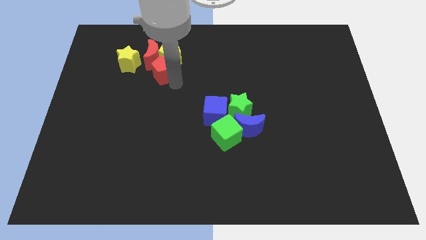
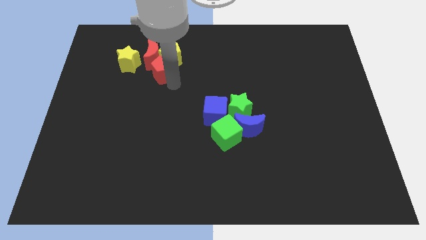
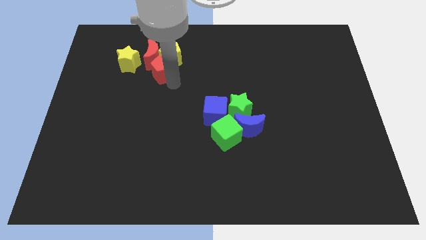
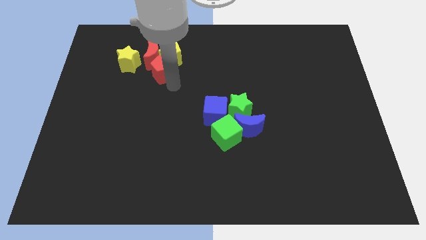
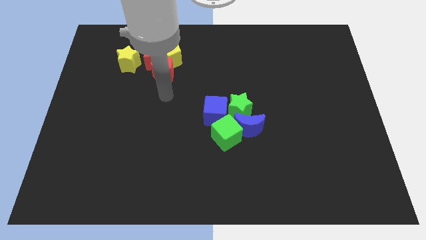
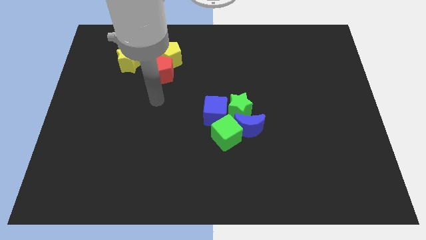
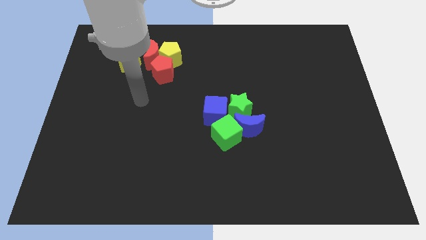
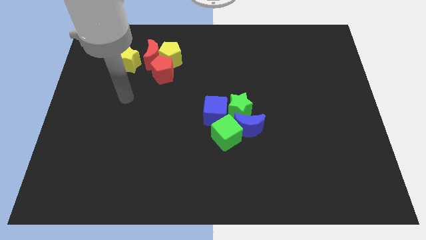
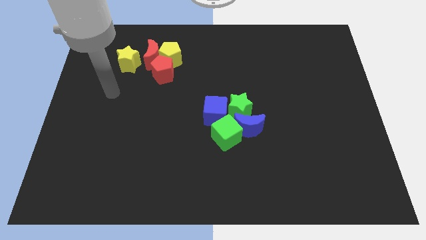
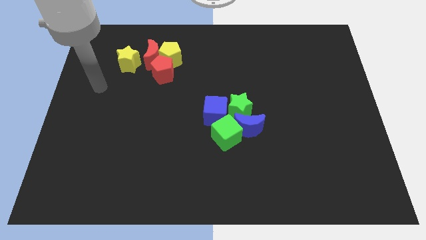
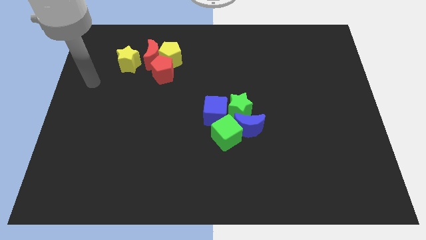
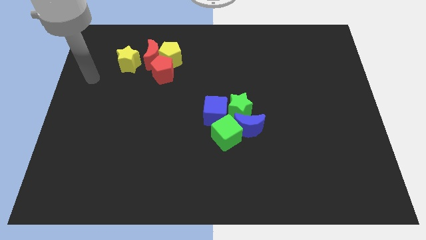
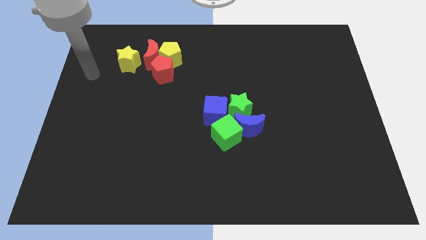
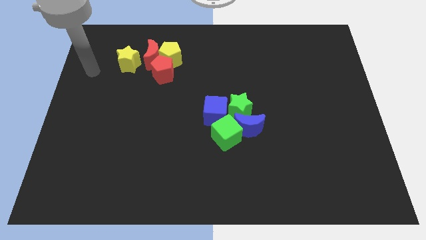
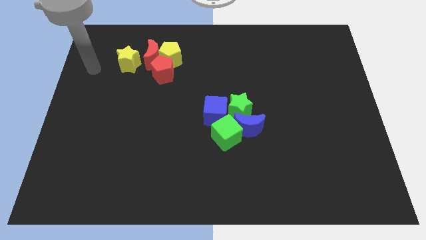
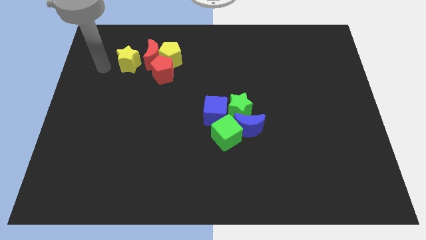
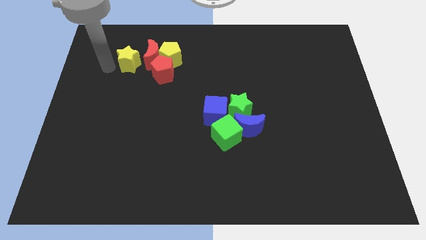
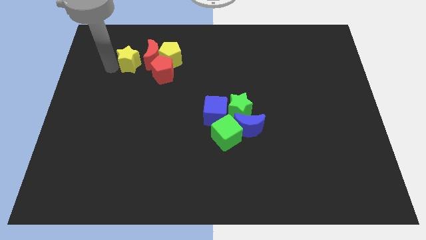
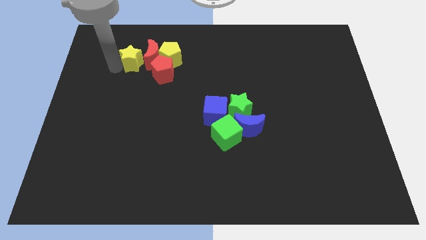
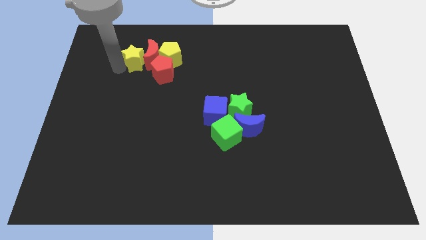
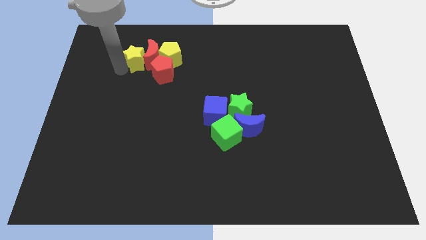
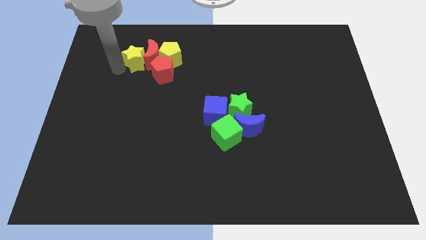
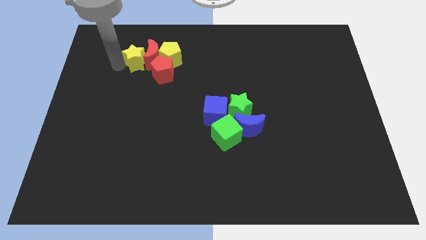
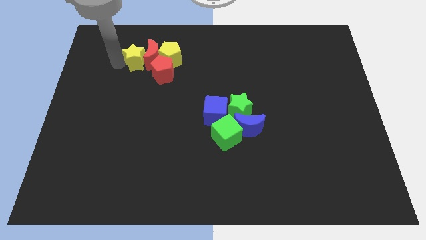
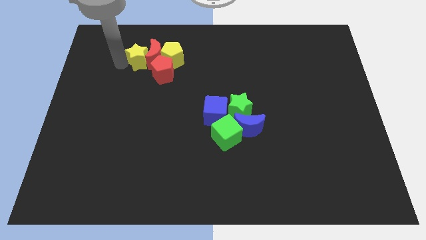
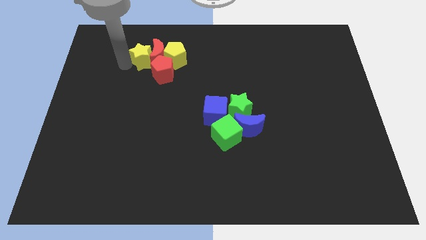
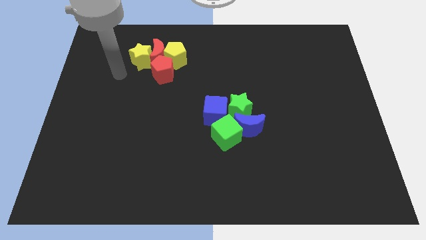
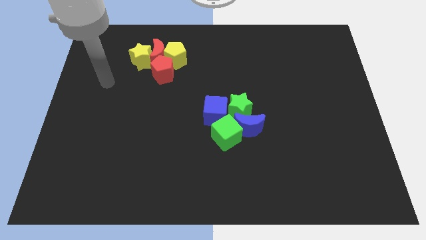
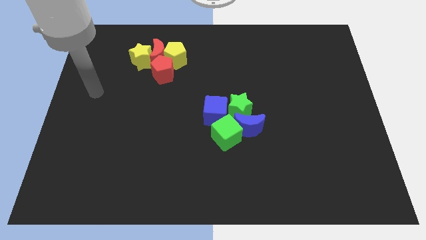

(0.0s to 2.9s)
push yellow star into the group of blocks

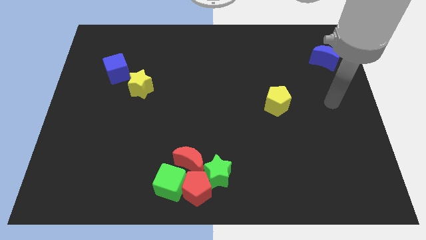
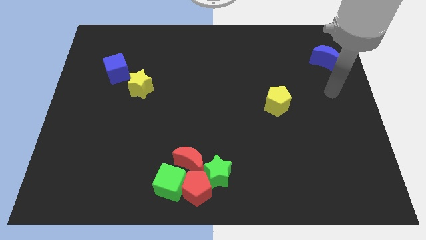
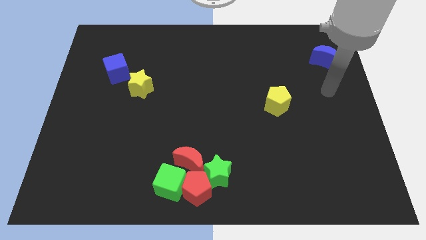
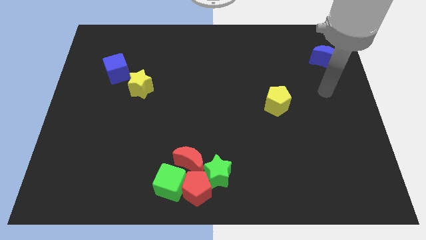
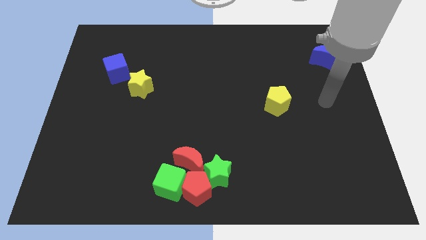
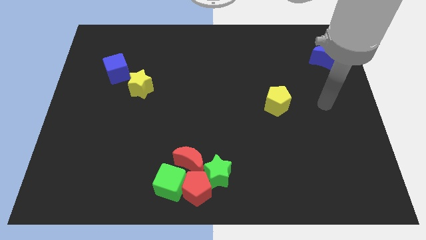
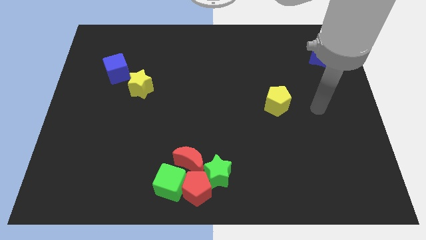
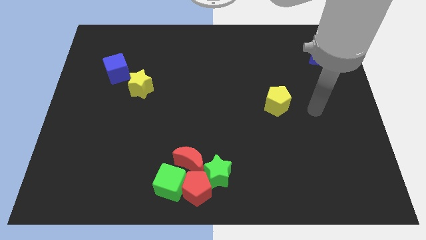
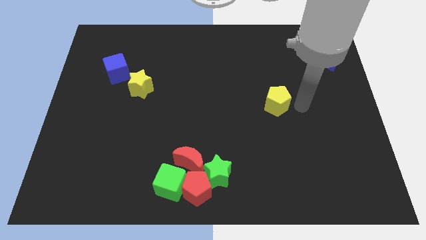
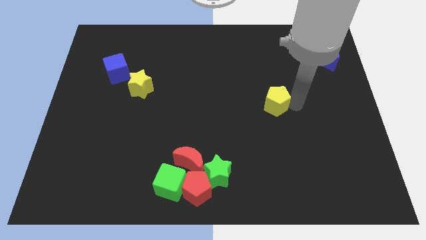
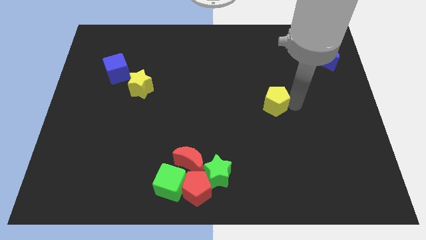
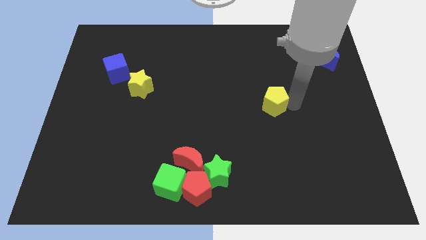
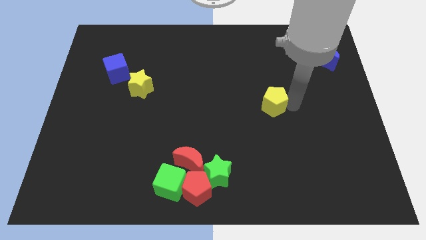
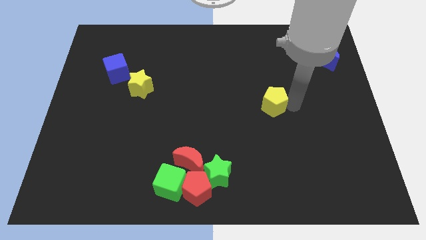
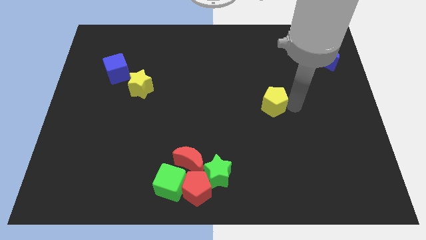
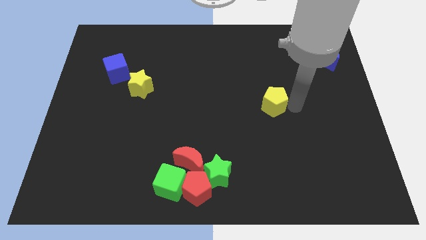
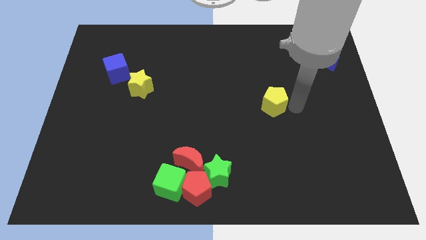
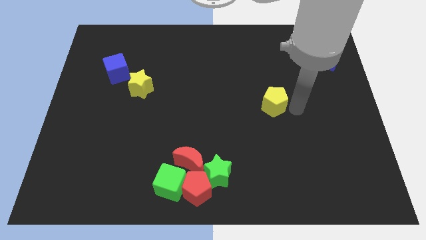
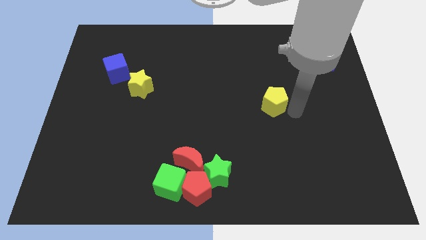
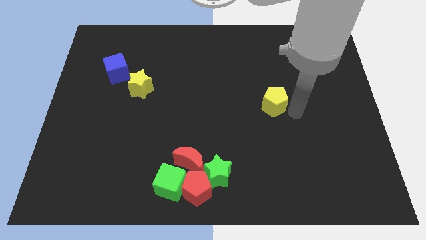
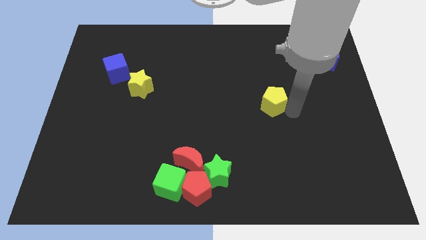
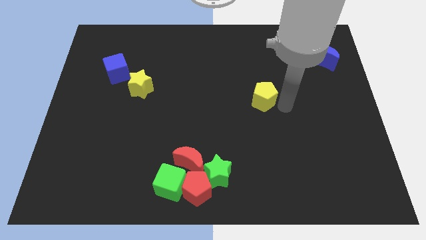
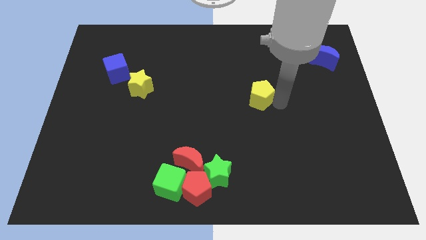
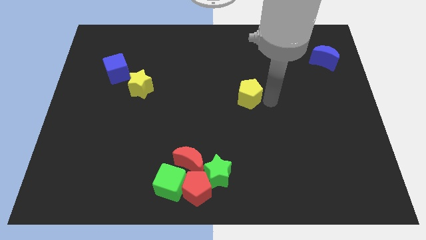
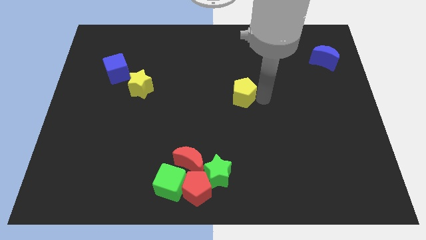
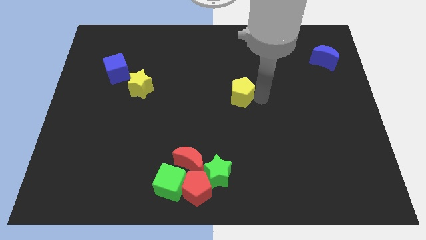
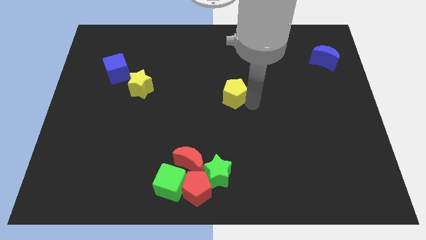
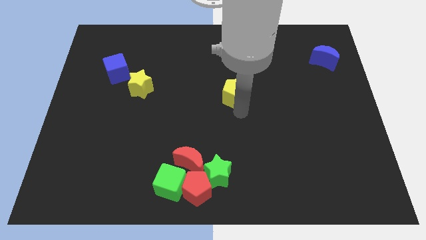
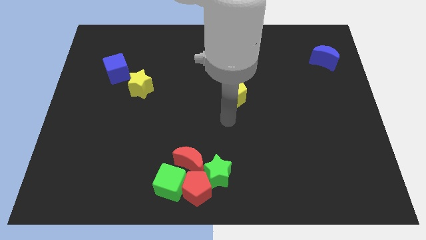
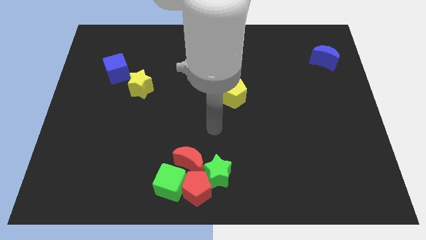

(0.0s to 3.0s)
move the yellow pentagon towards the center side

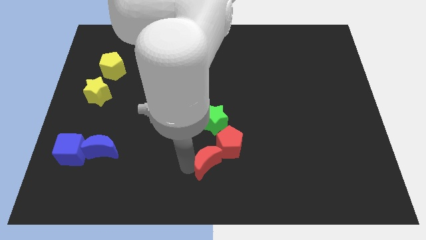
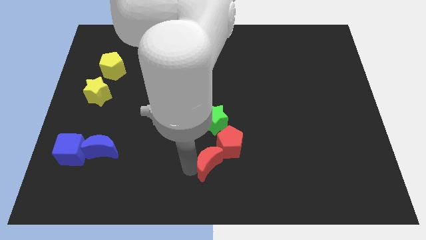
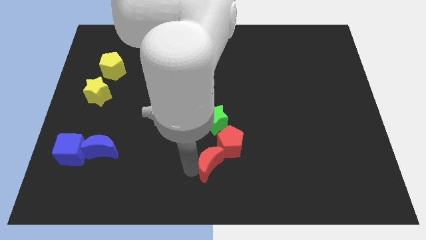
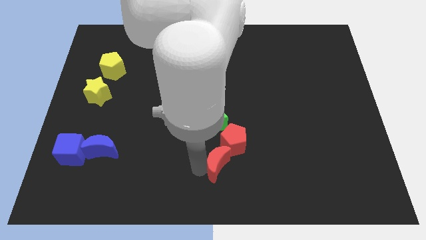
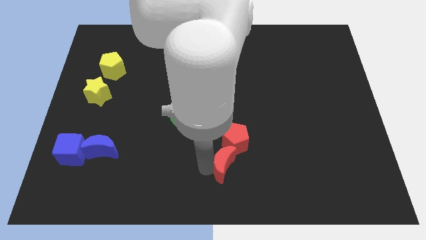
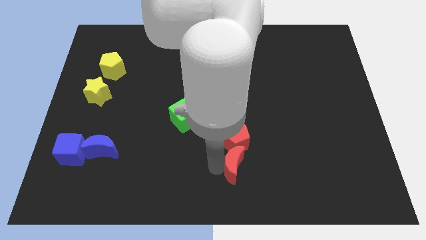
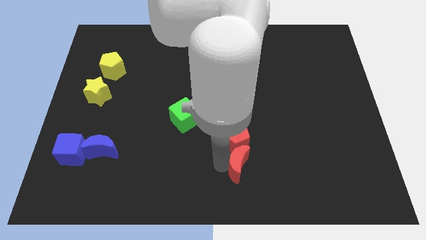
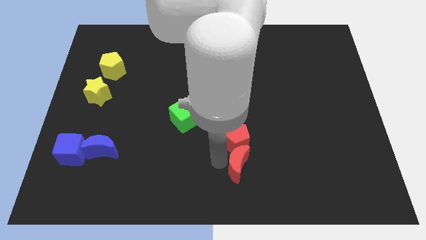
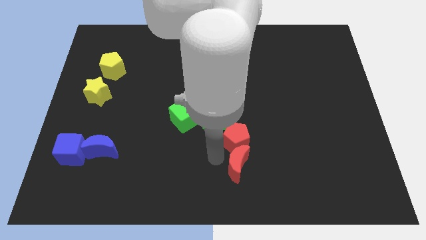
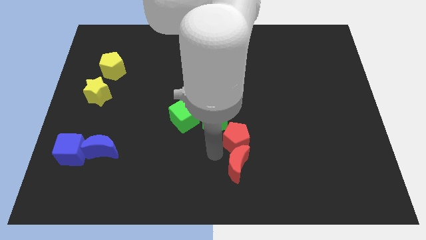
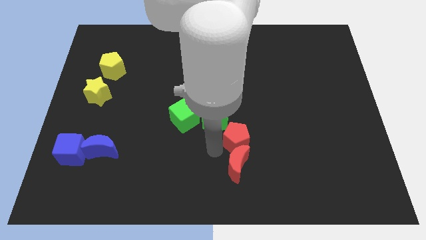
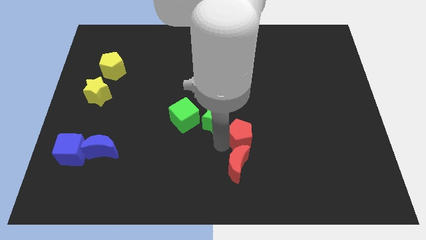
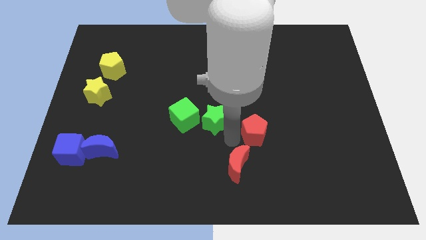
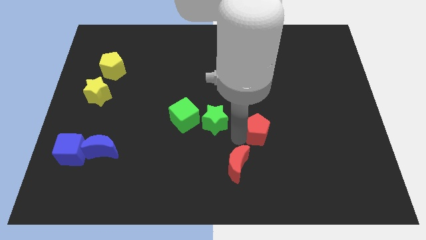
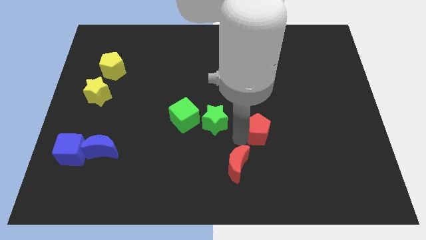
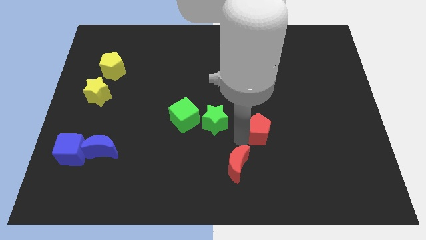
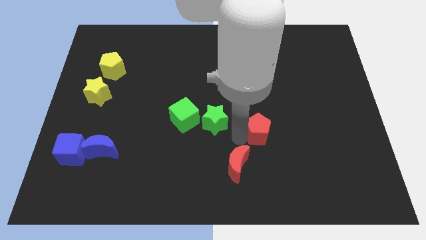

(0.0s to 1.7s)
push the red pentagon and red crescent towards right

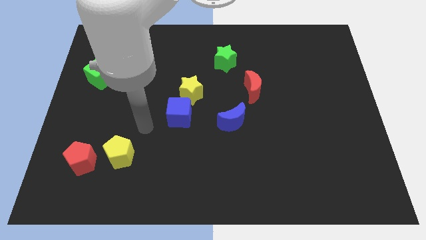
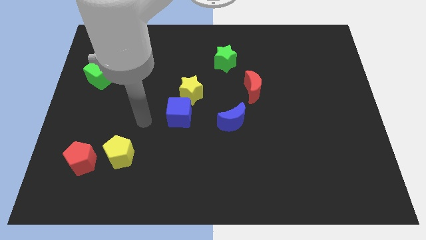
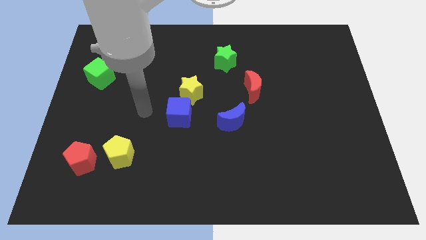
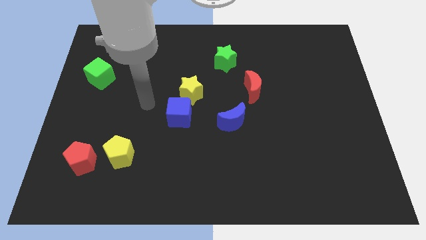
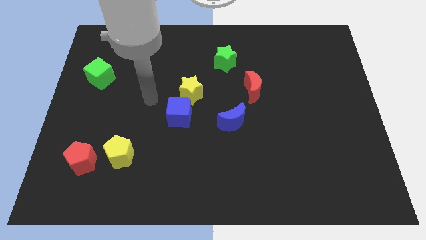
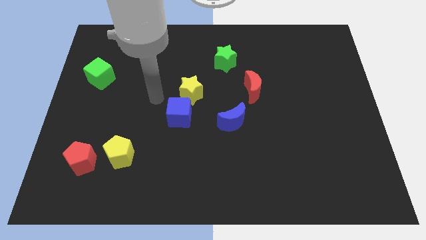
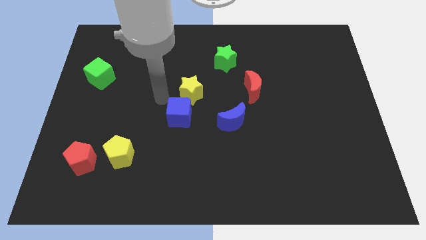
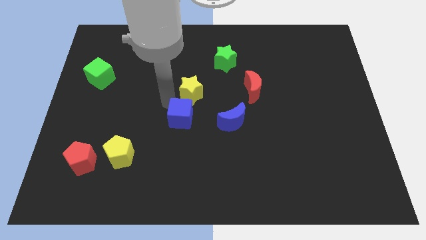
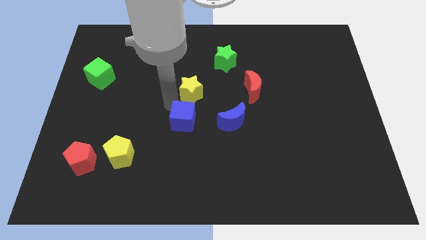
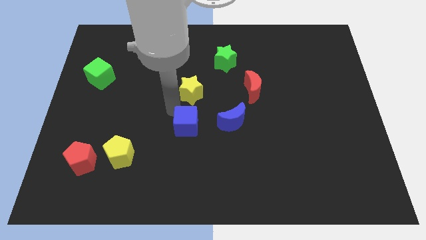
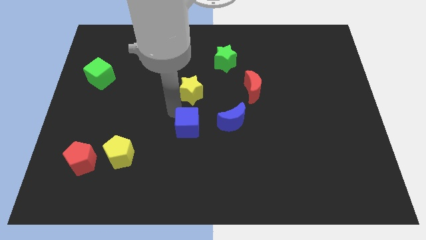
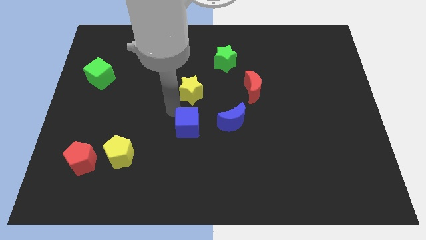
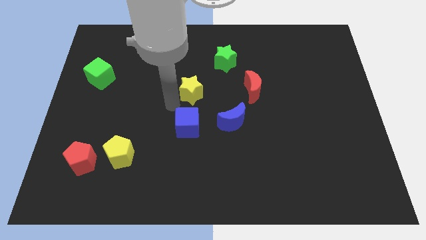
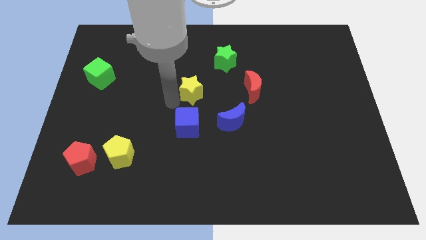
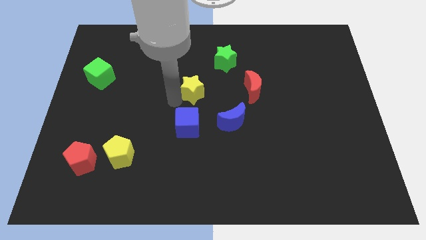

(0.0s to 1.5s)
move the blue cube left to the blue crescent

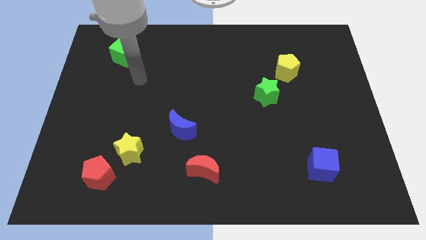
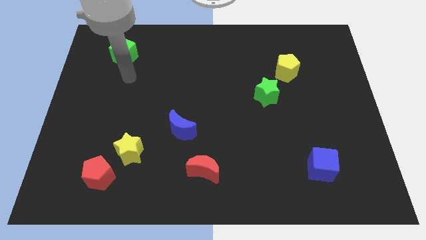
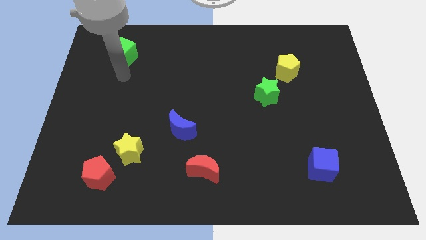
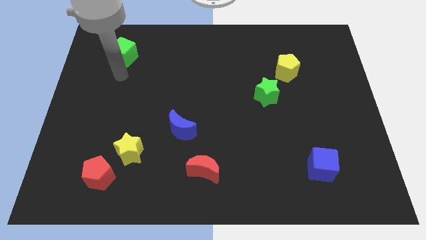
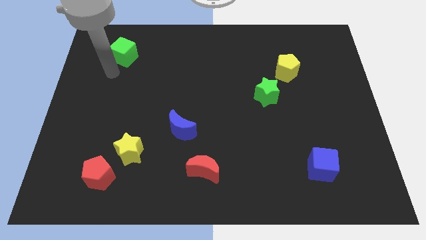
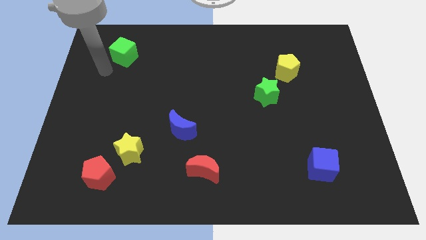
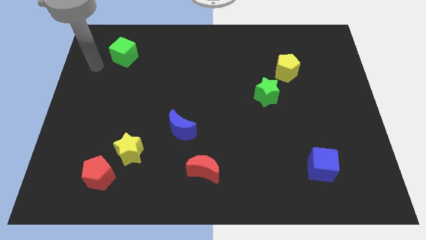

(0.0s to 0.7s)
move arm near green cube
